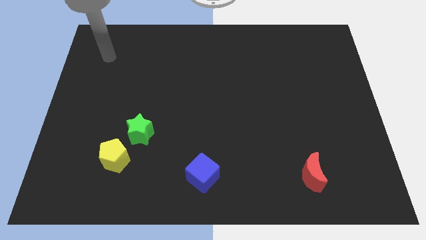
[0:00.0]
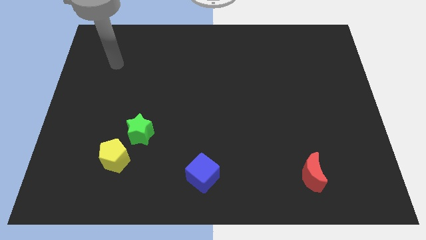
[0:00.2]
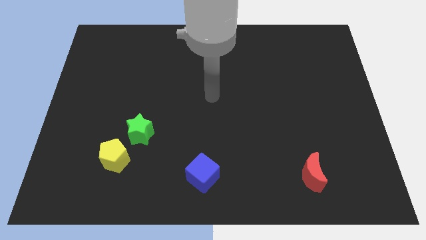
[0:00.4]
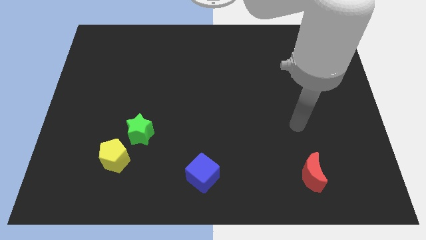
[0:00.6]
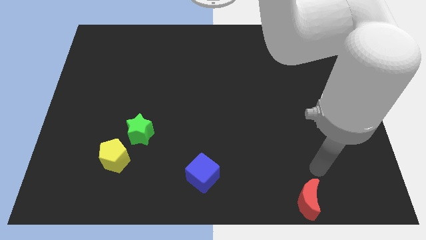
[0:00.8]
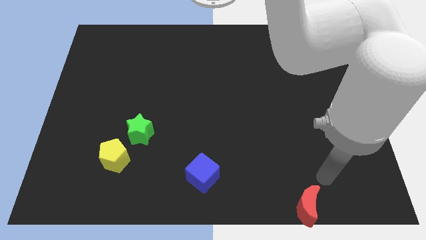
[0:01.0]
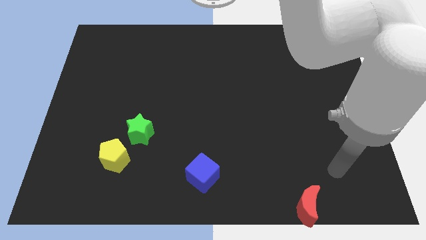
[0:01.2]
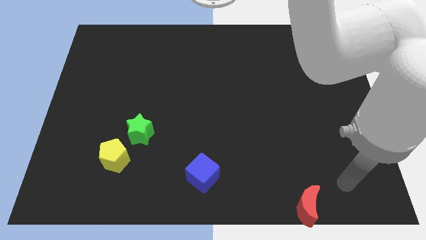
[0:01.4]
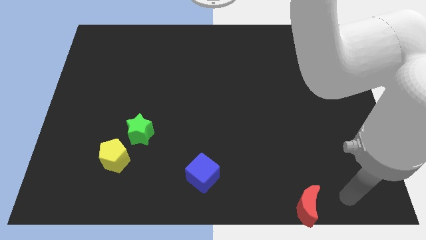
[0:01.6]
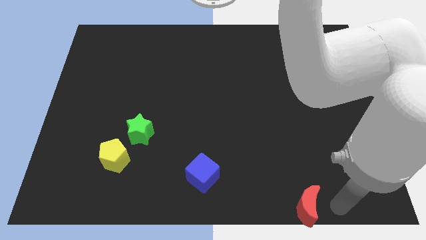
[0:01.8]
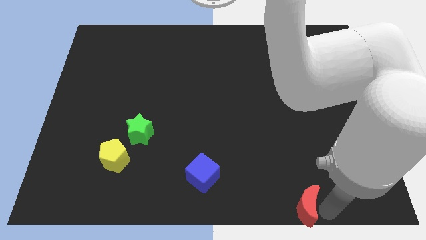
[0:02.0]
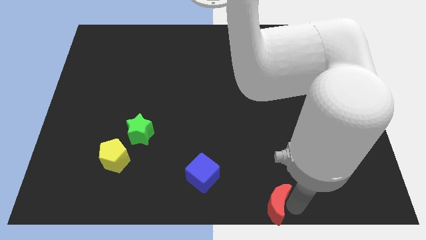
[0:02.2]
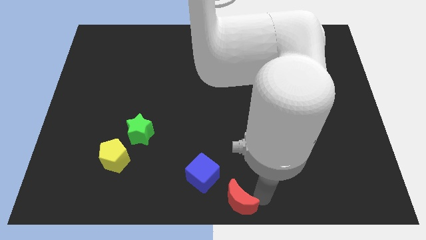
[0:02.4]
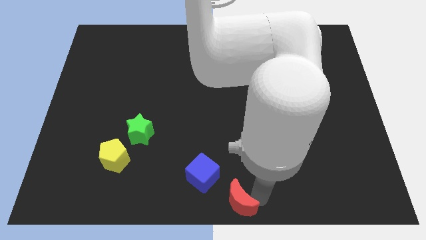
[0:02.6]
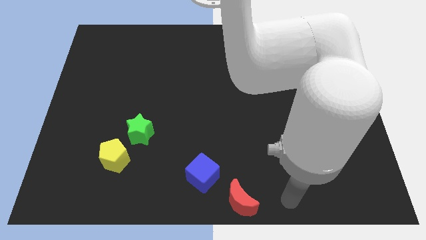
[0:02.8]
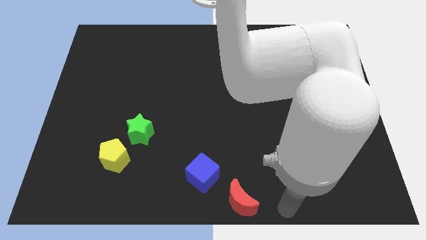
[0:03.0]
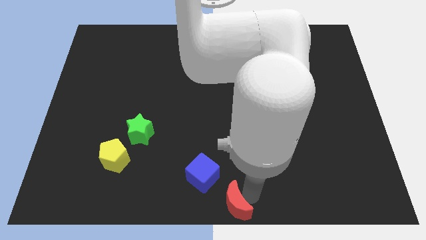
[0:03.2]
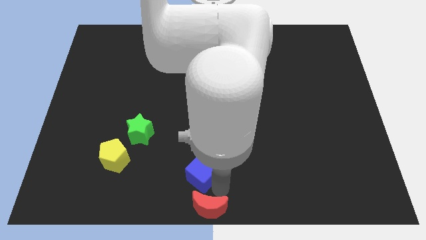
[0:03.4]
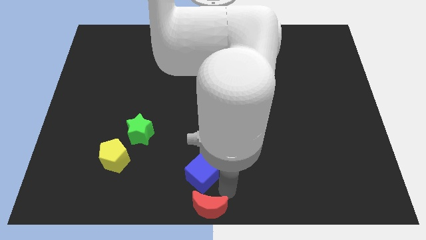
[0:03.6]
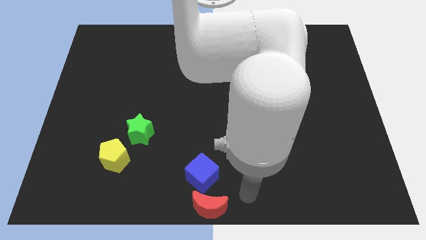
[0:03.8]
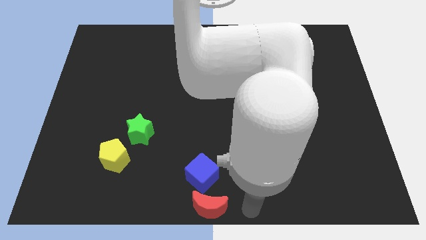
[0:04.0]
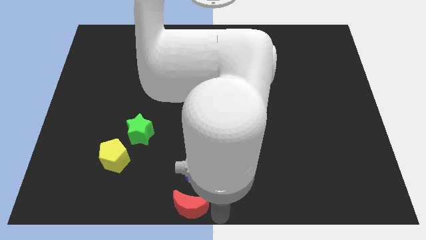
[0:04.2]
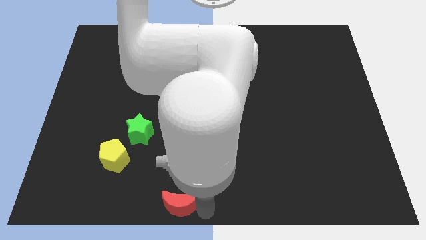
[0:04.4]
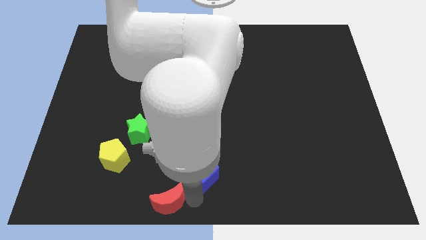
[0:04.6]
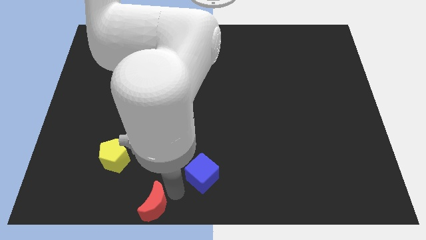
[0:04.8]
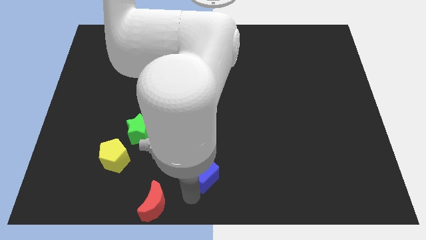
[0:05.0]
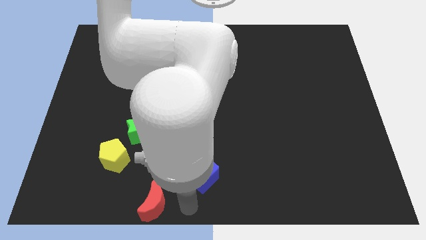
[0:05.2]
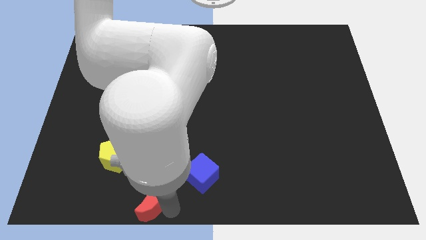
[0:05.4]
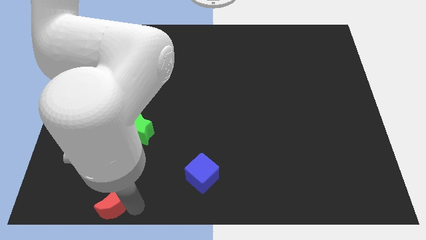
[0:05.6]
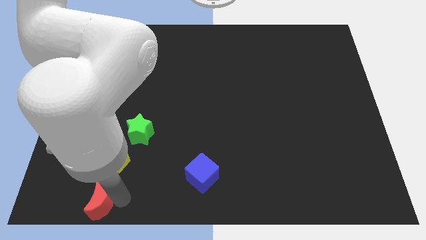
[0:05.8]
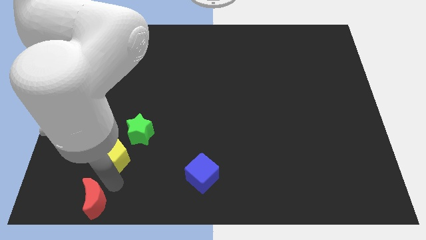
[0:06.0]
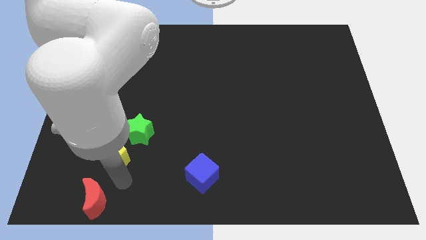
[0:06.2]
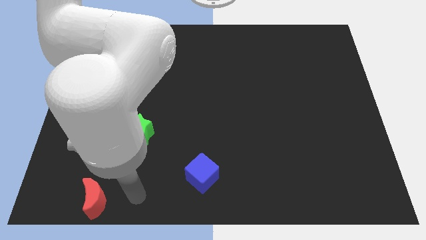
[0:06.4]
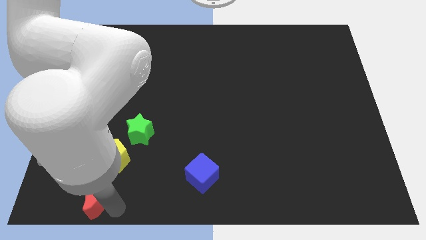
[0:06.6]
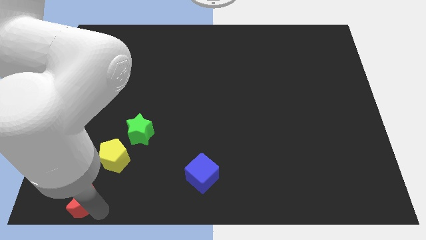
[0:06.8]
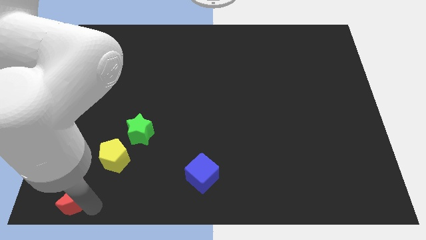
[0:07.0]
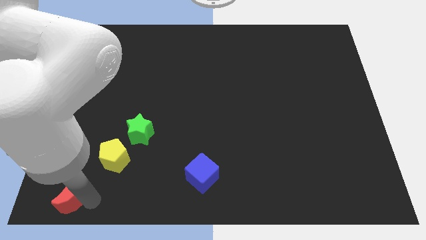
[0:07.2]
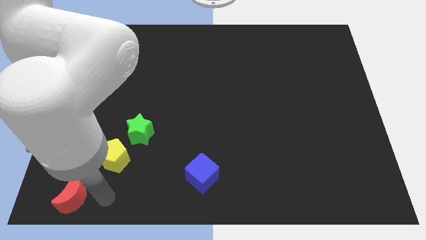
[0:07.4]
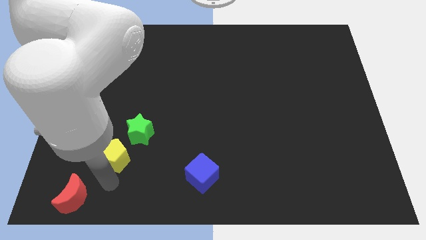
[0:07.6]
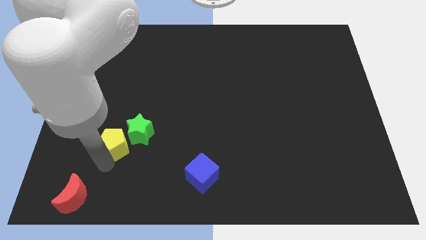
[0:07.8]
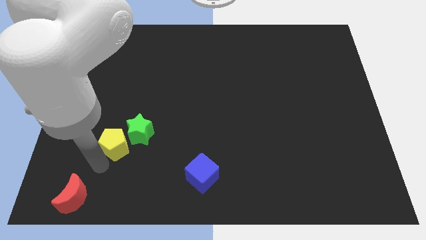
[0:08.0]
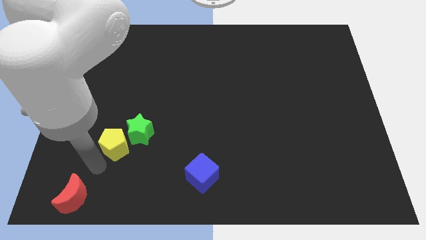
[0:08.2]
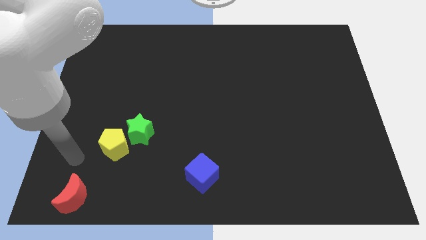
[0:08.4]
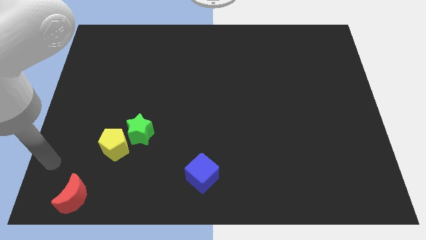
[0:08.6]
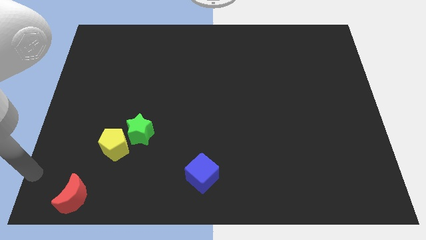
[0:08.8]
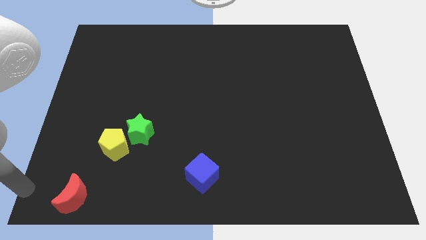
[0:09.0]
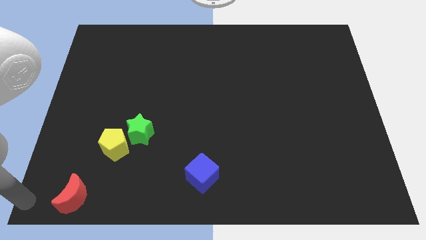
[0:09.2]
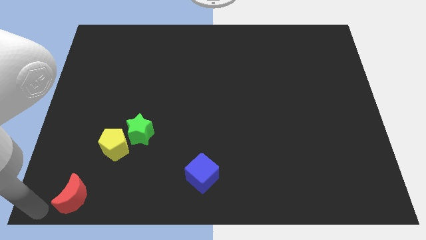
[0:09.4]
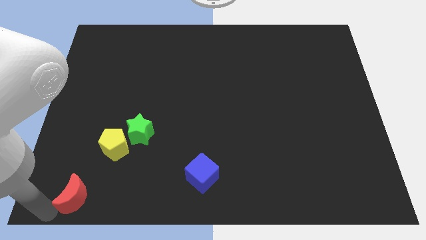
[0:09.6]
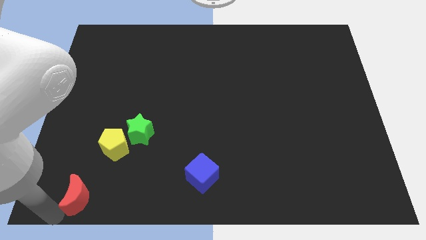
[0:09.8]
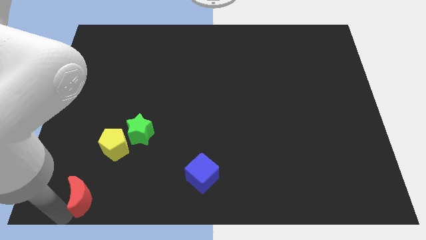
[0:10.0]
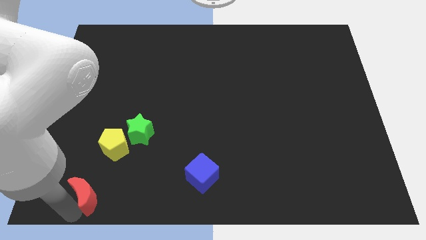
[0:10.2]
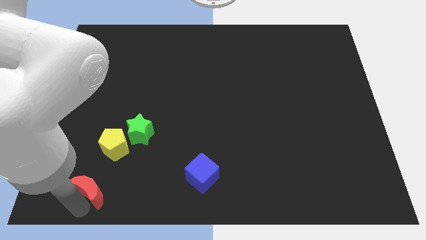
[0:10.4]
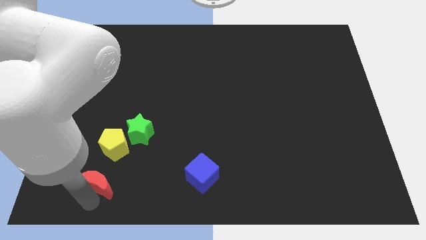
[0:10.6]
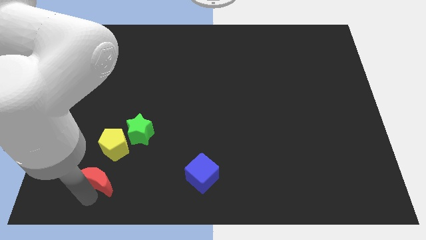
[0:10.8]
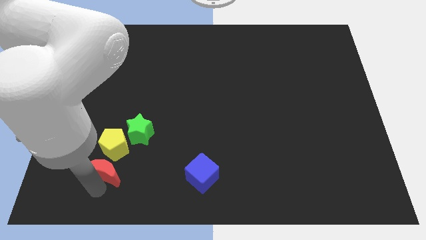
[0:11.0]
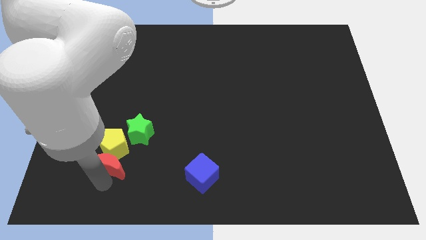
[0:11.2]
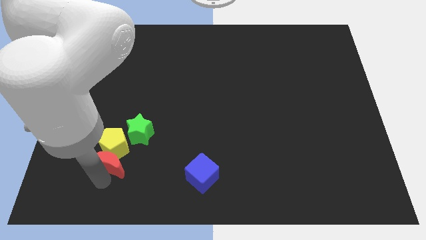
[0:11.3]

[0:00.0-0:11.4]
move the red moon to the yellow pentagon

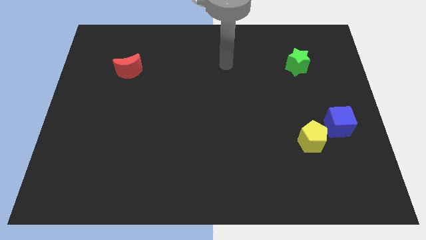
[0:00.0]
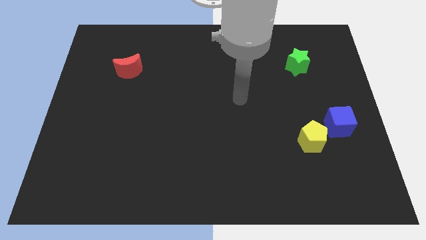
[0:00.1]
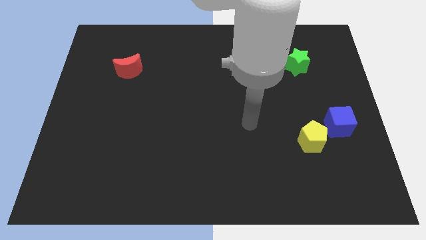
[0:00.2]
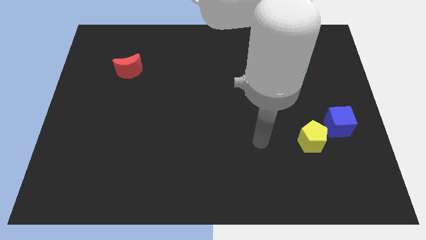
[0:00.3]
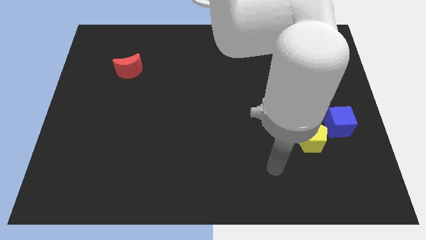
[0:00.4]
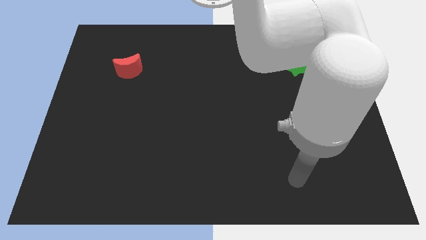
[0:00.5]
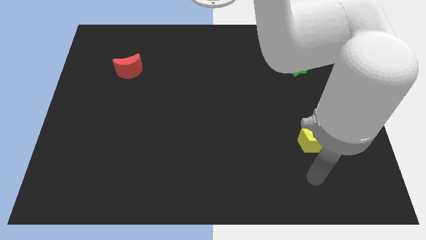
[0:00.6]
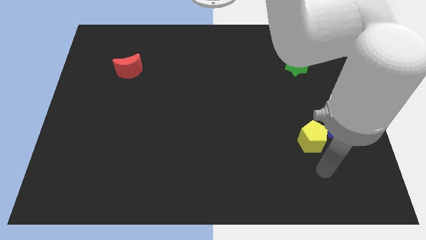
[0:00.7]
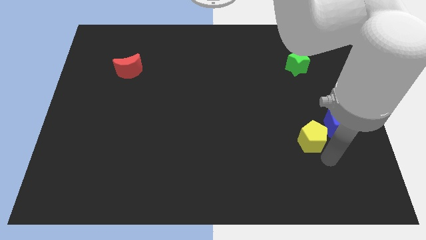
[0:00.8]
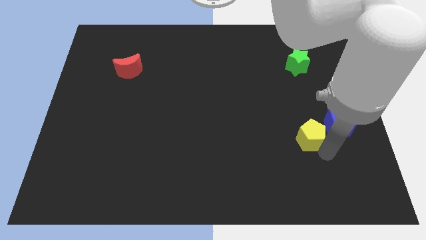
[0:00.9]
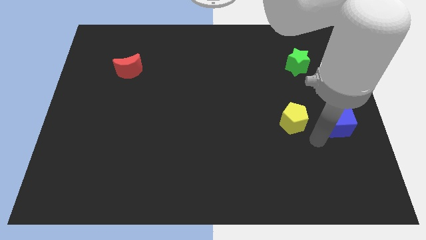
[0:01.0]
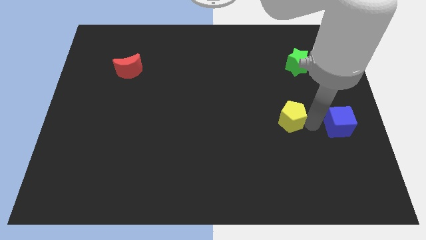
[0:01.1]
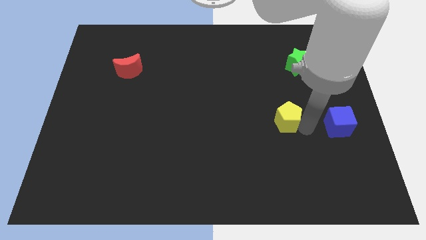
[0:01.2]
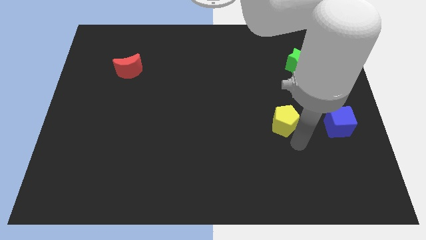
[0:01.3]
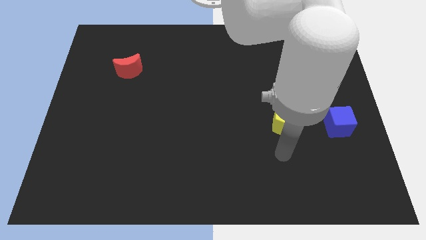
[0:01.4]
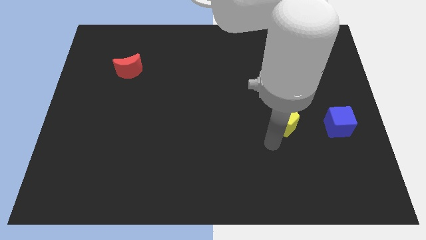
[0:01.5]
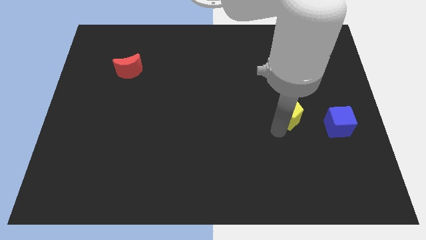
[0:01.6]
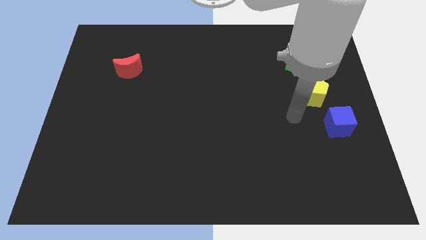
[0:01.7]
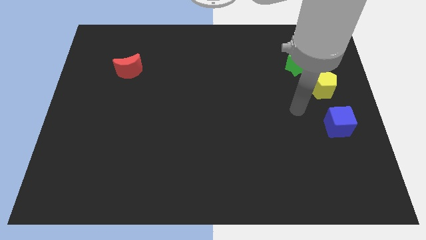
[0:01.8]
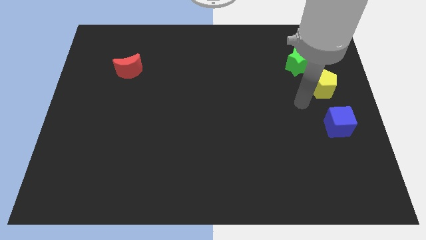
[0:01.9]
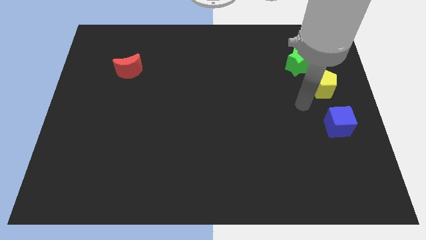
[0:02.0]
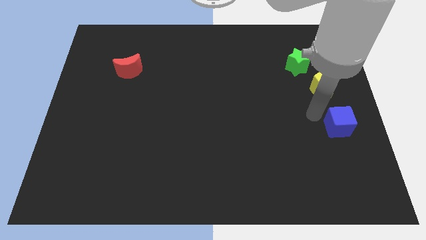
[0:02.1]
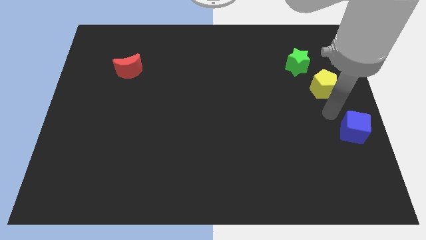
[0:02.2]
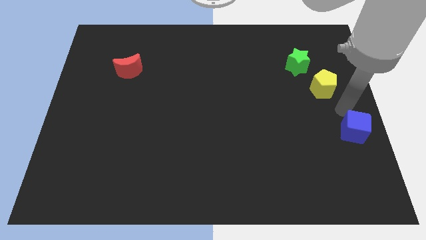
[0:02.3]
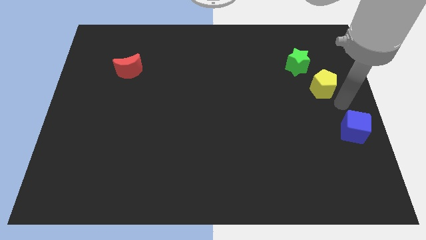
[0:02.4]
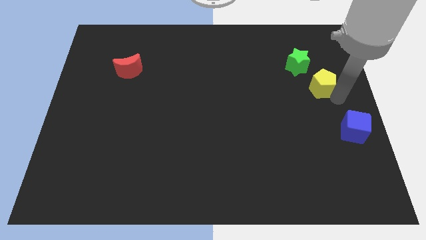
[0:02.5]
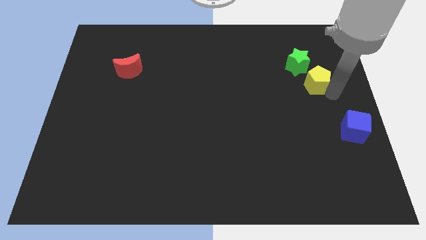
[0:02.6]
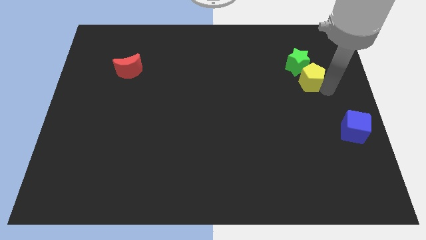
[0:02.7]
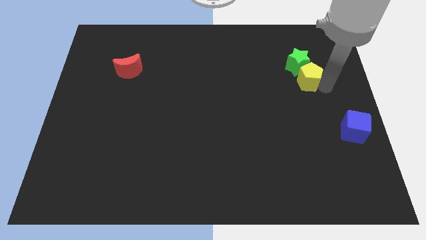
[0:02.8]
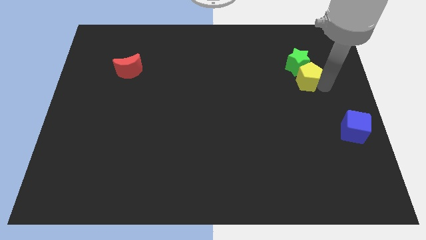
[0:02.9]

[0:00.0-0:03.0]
push the yellow block close to the star
